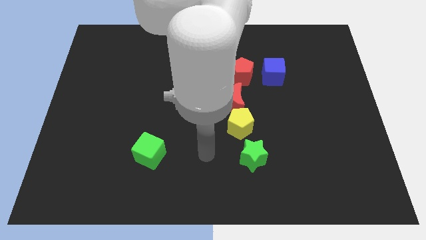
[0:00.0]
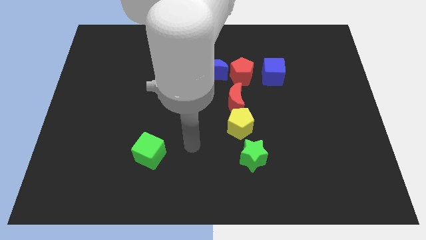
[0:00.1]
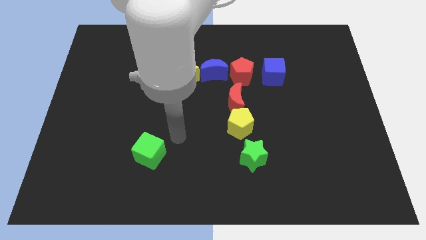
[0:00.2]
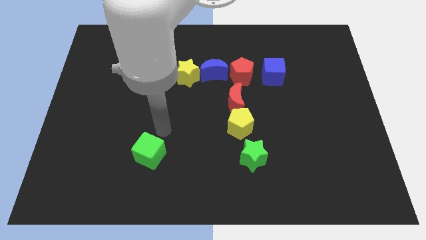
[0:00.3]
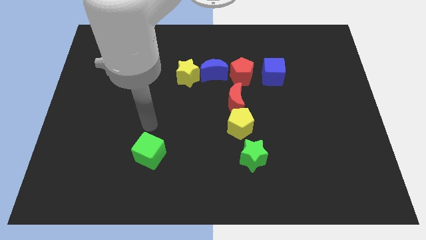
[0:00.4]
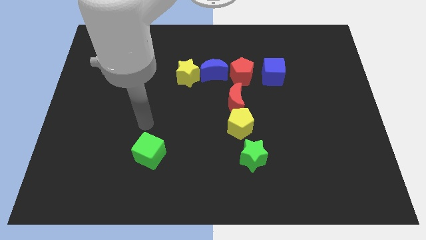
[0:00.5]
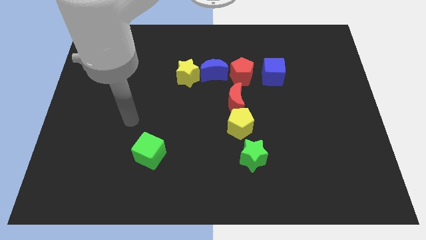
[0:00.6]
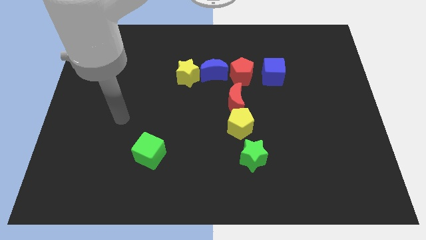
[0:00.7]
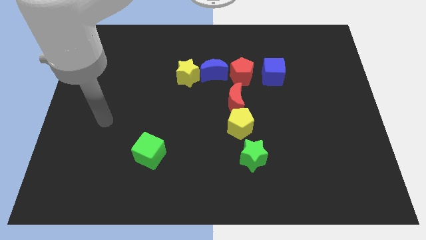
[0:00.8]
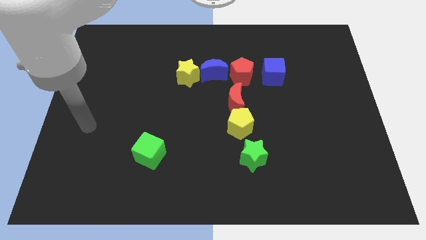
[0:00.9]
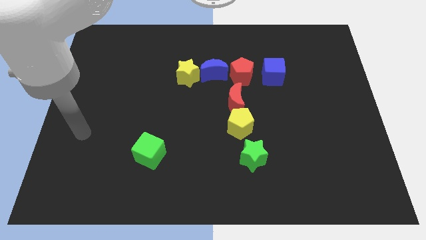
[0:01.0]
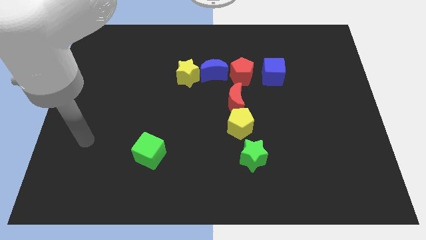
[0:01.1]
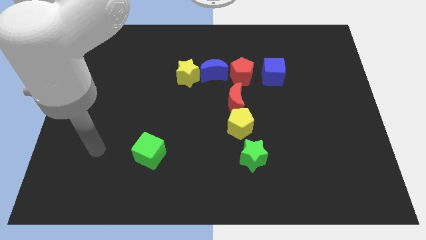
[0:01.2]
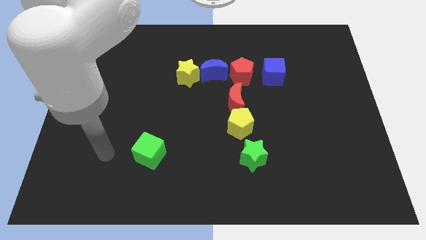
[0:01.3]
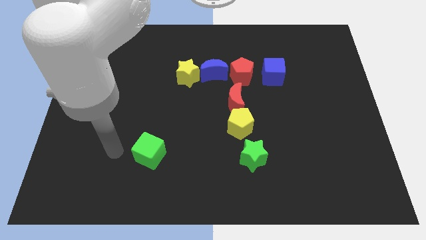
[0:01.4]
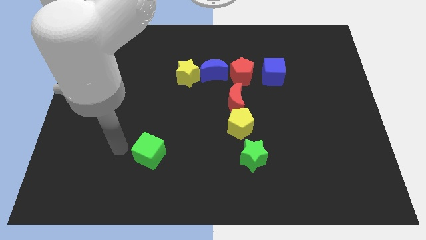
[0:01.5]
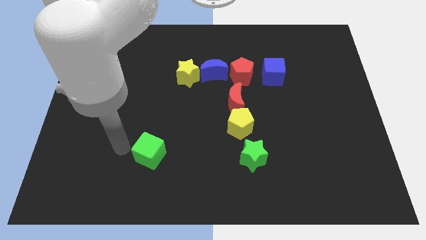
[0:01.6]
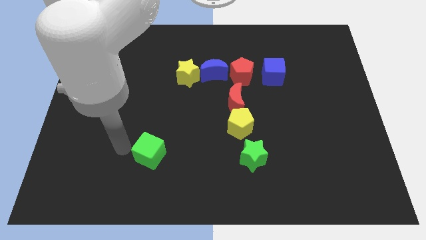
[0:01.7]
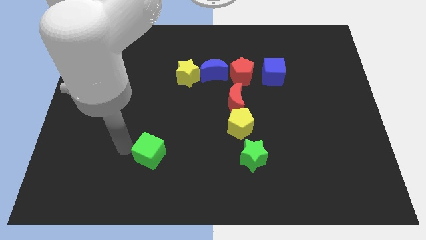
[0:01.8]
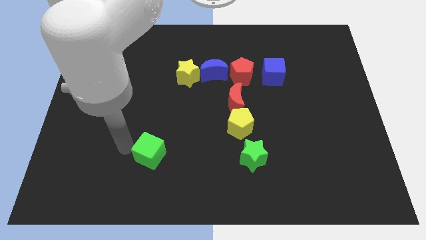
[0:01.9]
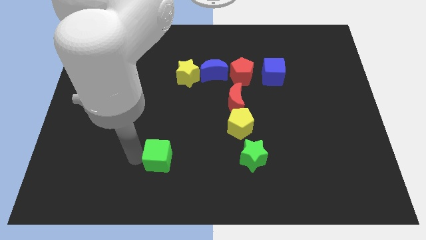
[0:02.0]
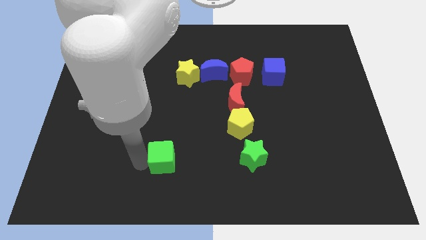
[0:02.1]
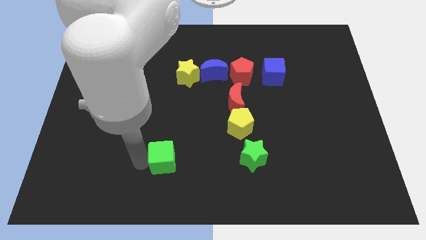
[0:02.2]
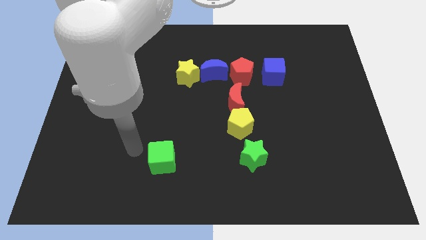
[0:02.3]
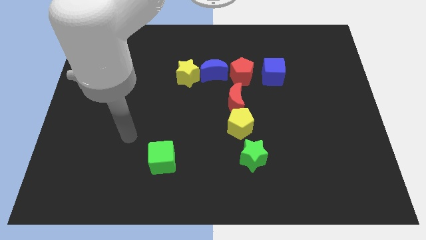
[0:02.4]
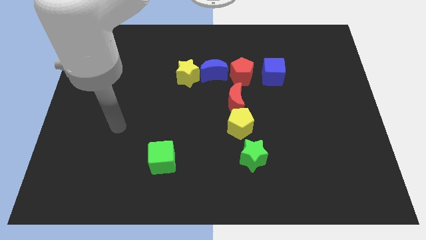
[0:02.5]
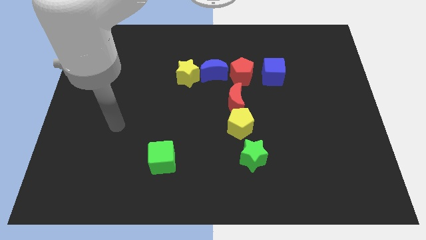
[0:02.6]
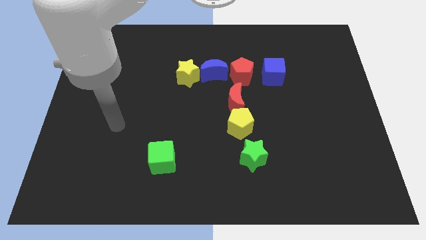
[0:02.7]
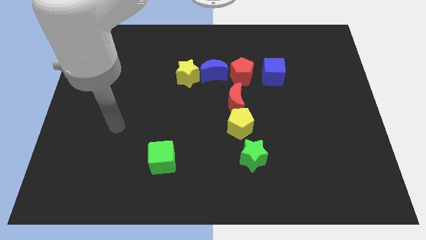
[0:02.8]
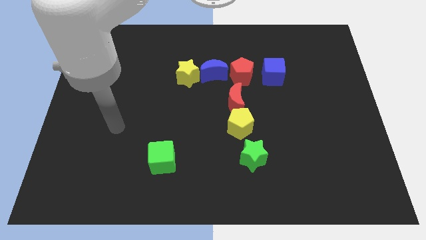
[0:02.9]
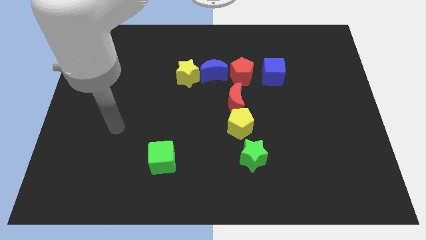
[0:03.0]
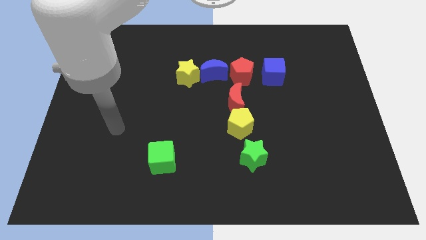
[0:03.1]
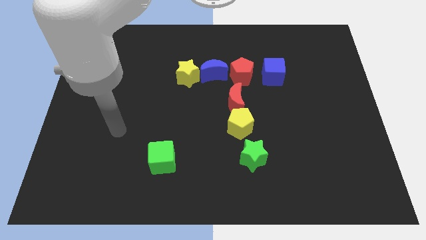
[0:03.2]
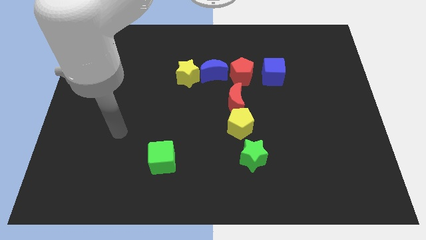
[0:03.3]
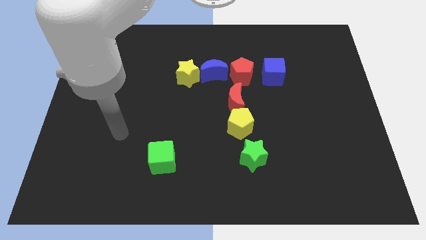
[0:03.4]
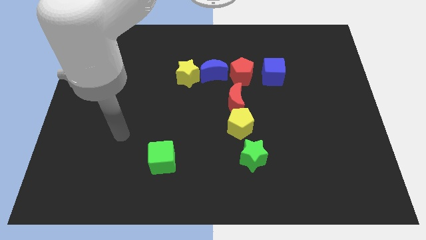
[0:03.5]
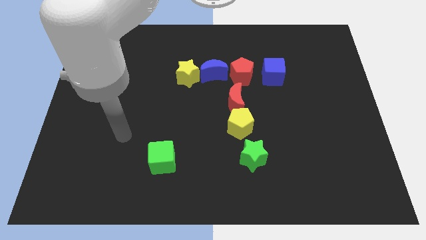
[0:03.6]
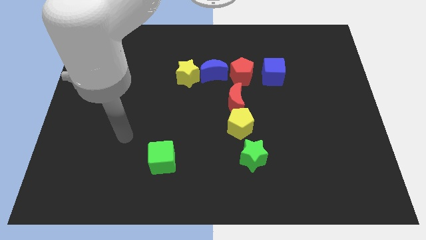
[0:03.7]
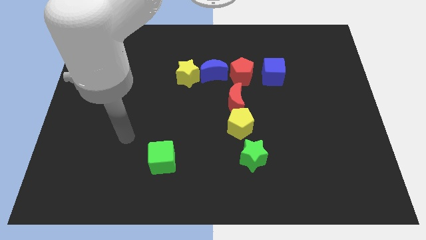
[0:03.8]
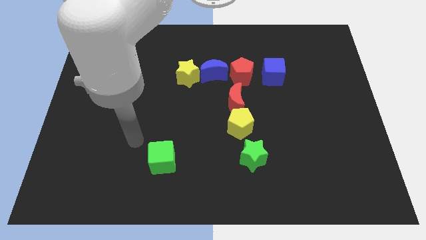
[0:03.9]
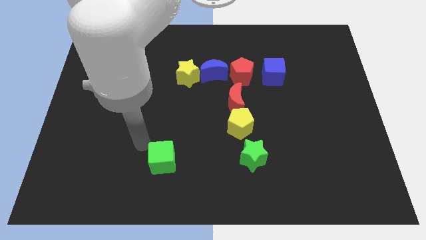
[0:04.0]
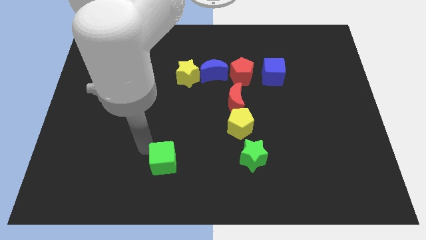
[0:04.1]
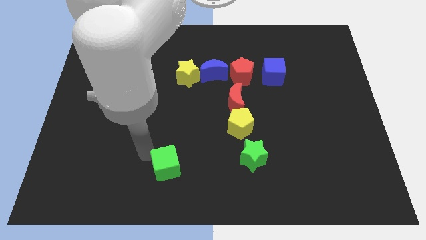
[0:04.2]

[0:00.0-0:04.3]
move the green cube to the left of the green star

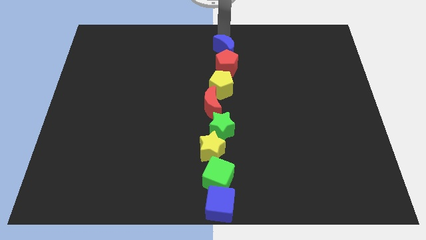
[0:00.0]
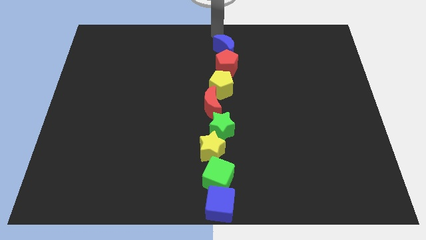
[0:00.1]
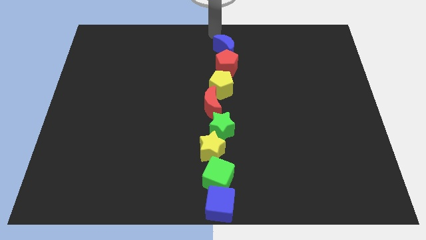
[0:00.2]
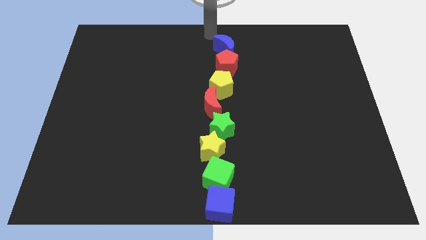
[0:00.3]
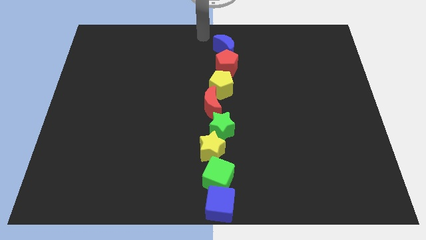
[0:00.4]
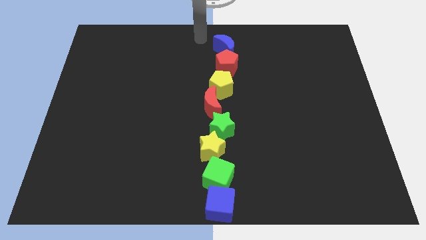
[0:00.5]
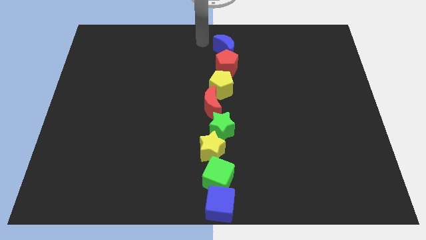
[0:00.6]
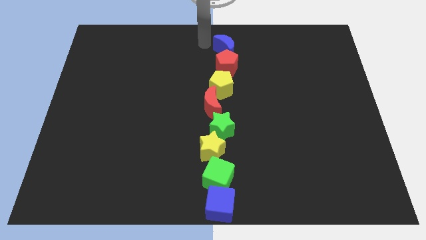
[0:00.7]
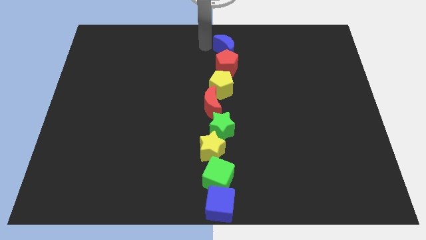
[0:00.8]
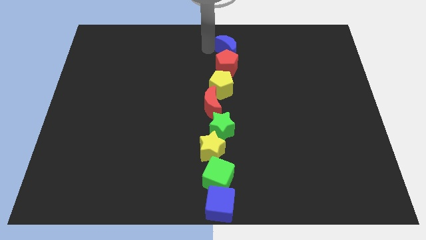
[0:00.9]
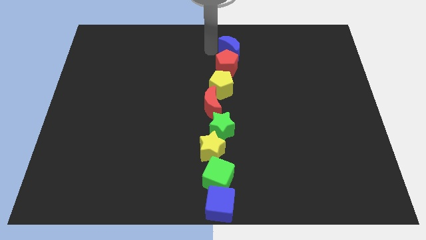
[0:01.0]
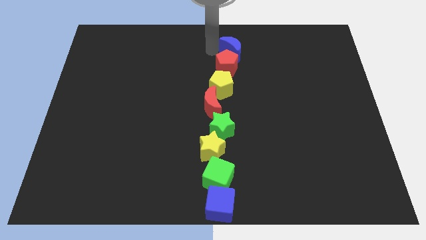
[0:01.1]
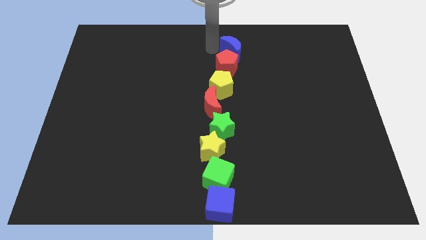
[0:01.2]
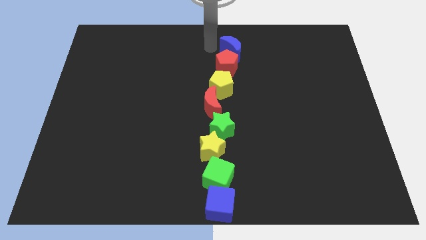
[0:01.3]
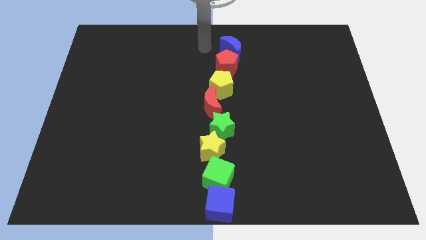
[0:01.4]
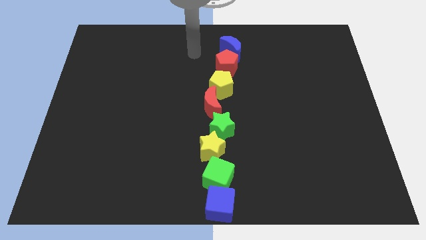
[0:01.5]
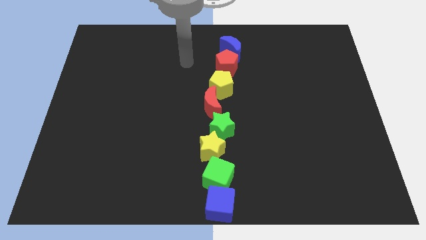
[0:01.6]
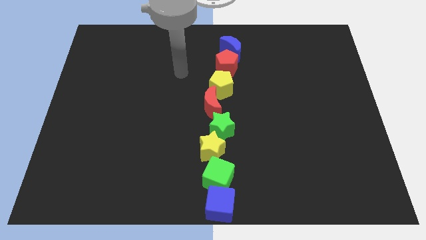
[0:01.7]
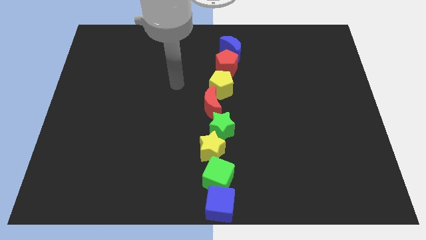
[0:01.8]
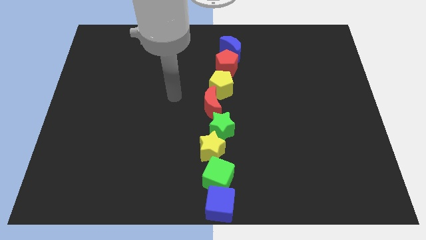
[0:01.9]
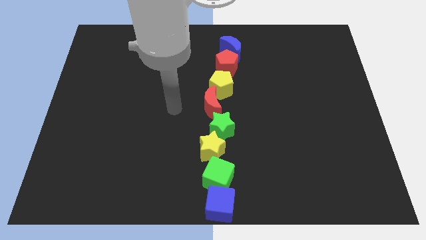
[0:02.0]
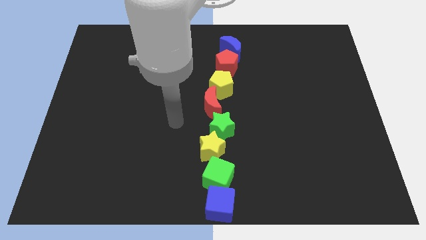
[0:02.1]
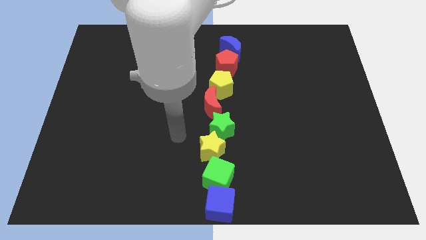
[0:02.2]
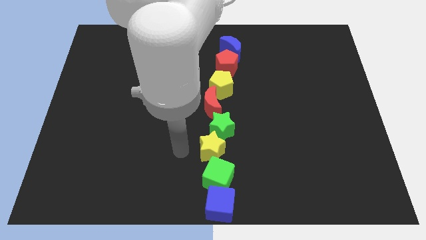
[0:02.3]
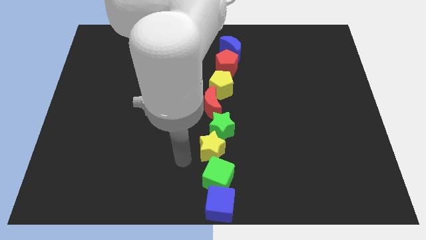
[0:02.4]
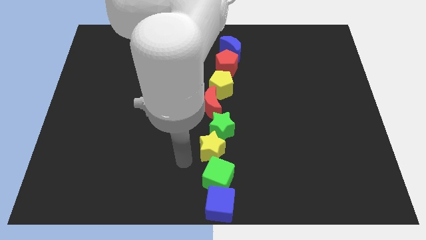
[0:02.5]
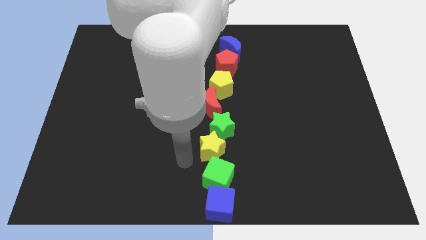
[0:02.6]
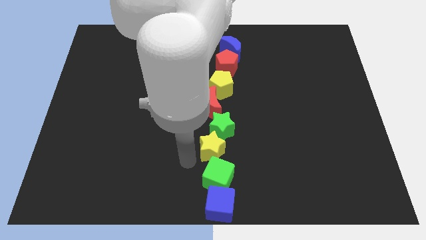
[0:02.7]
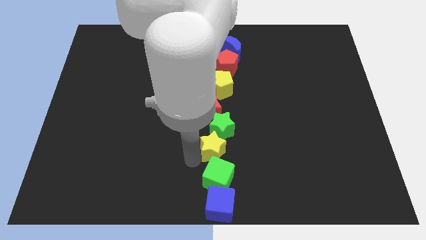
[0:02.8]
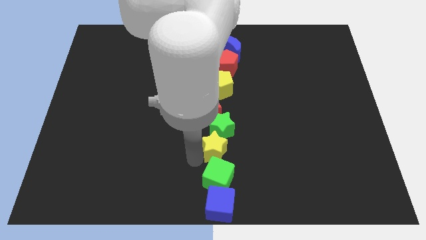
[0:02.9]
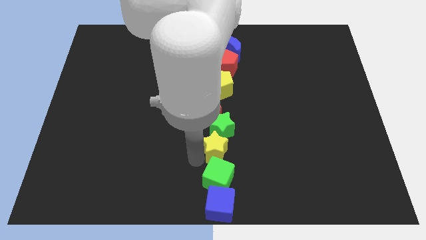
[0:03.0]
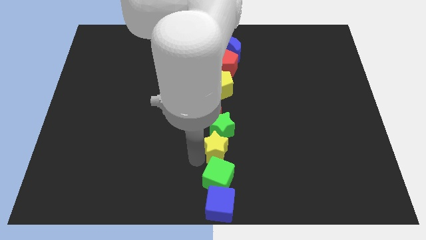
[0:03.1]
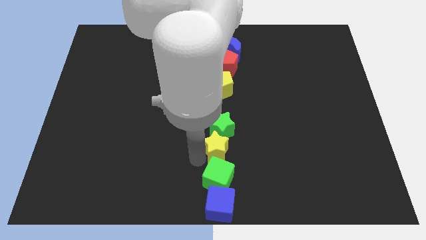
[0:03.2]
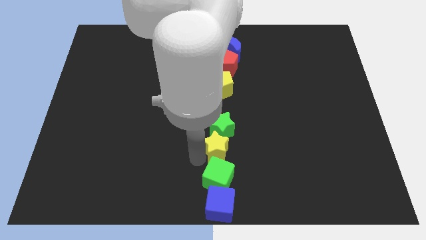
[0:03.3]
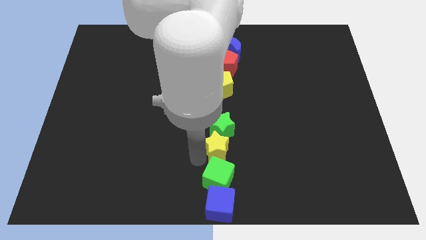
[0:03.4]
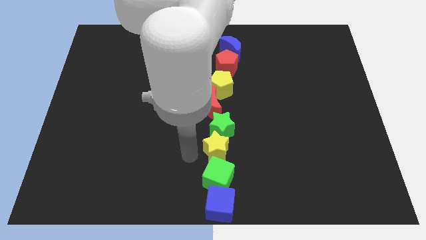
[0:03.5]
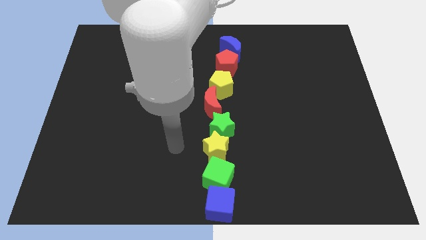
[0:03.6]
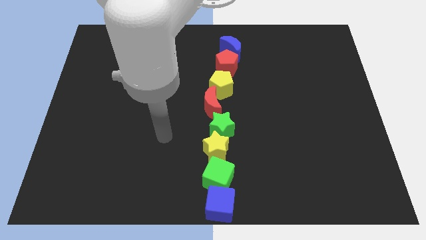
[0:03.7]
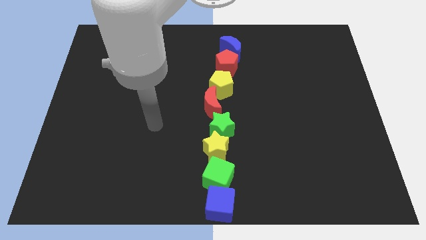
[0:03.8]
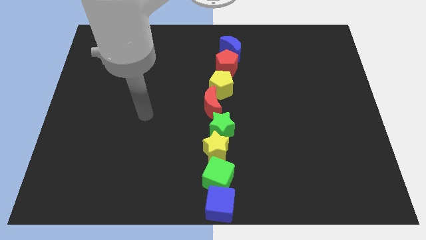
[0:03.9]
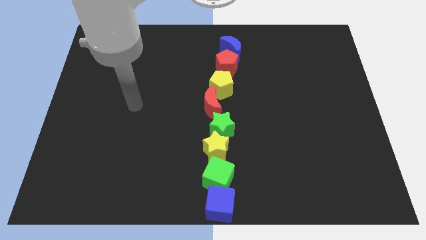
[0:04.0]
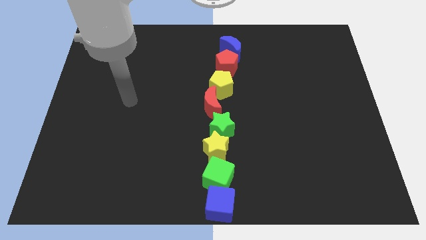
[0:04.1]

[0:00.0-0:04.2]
adjust the blue moon and yellow star to form a vertical line

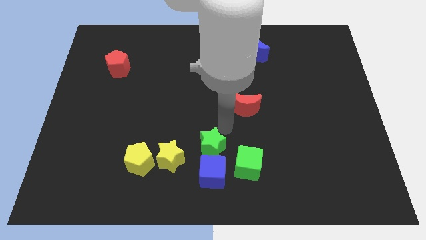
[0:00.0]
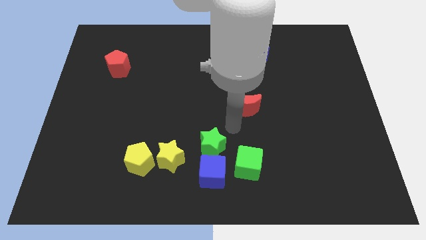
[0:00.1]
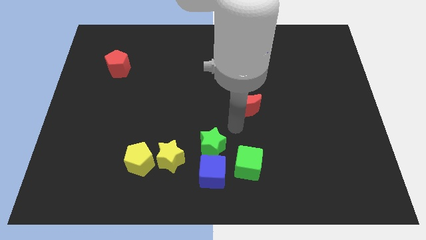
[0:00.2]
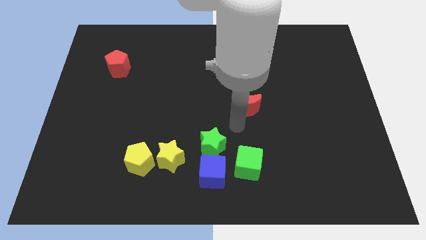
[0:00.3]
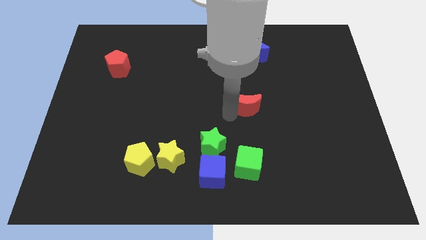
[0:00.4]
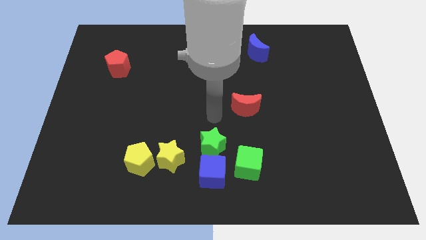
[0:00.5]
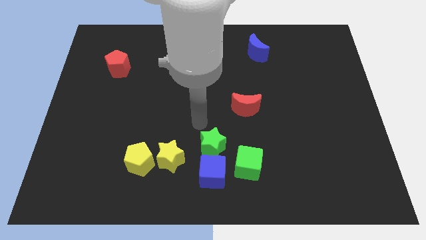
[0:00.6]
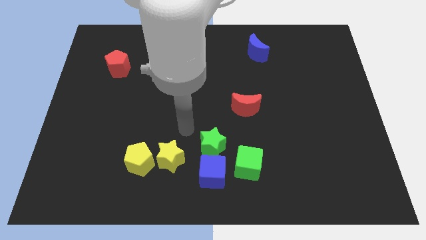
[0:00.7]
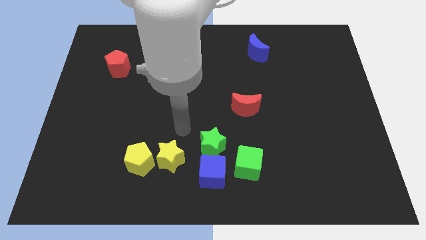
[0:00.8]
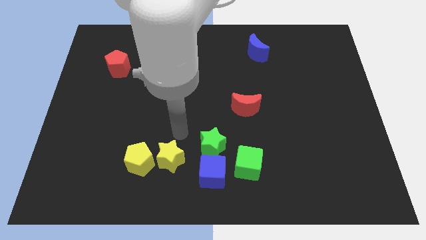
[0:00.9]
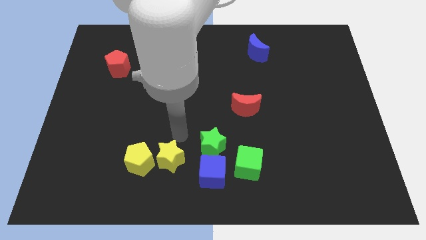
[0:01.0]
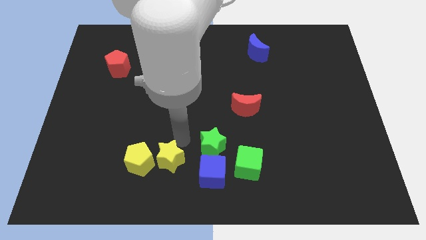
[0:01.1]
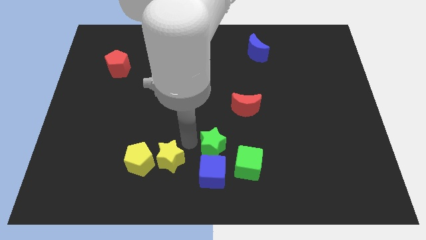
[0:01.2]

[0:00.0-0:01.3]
move your arm to the top of the yellow star
